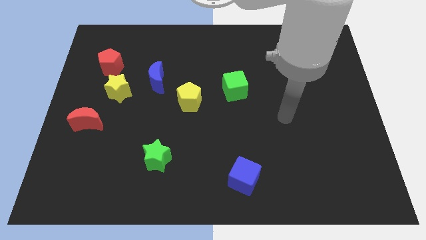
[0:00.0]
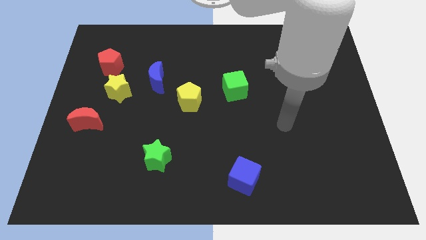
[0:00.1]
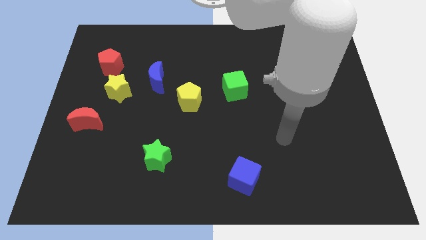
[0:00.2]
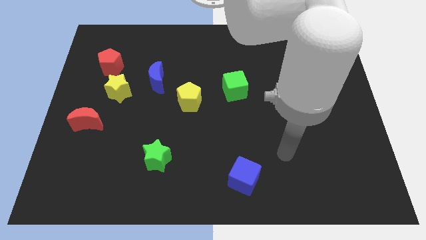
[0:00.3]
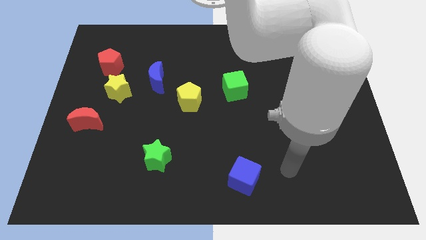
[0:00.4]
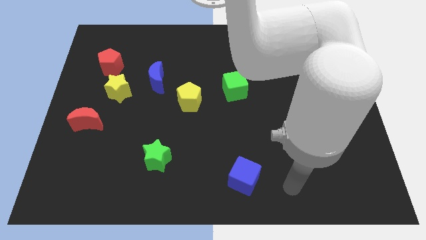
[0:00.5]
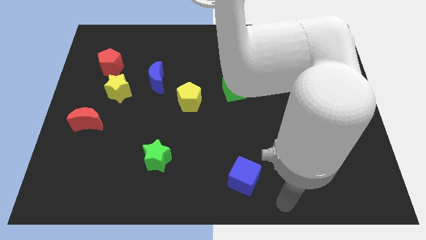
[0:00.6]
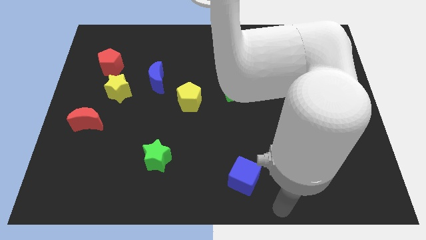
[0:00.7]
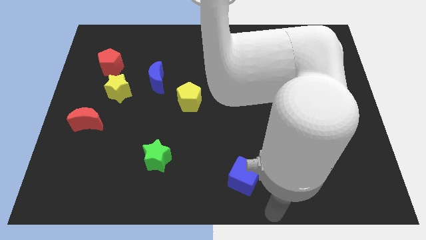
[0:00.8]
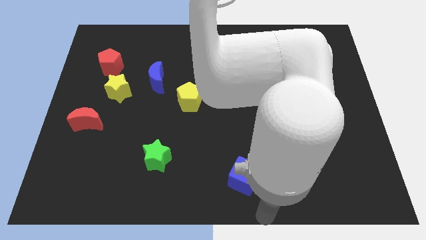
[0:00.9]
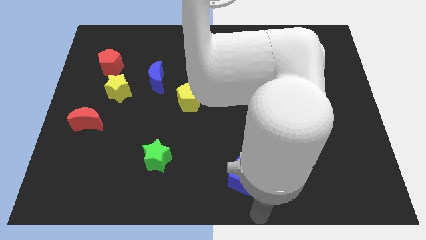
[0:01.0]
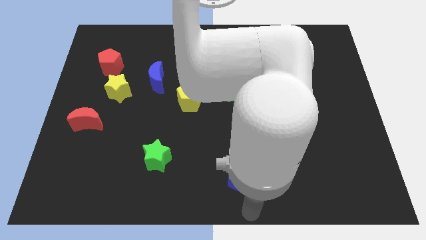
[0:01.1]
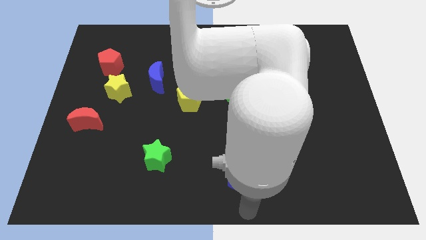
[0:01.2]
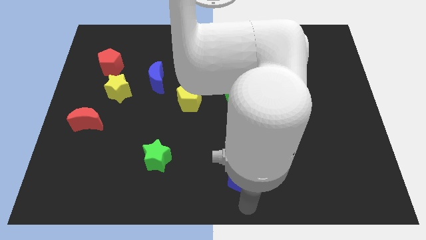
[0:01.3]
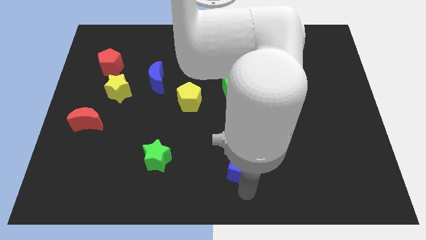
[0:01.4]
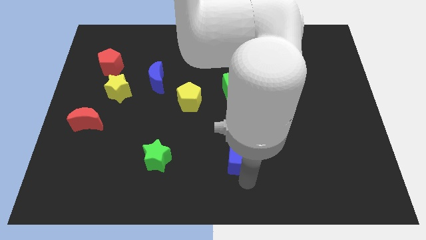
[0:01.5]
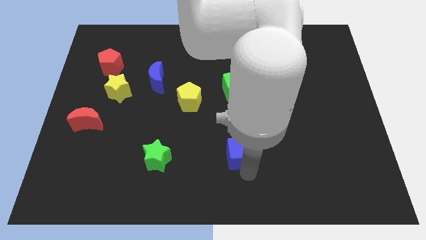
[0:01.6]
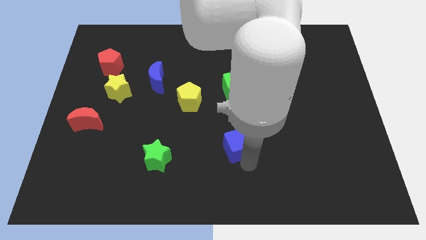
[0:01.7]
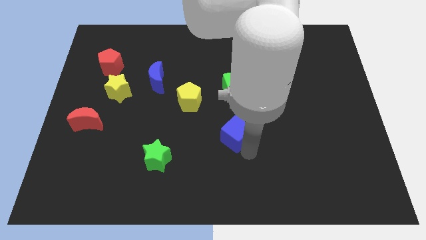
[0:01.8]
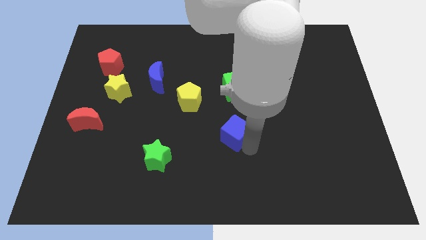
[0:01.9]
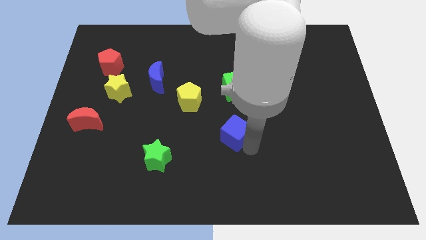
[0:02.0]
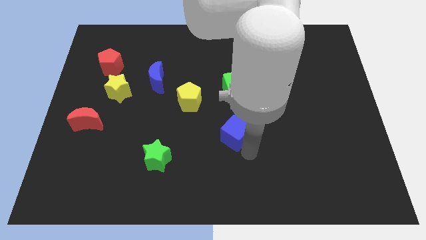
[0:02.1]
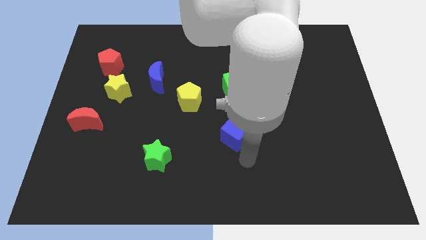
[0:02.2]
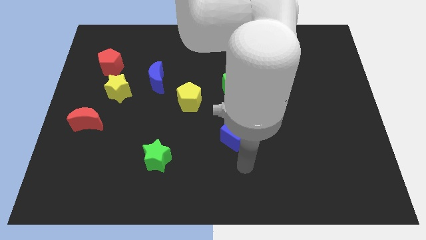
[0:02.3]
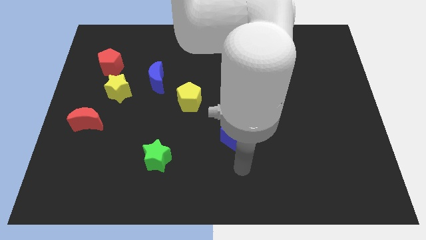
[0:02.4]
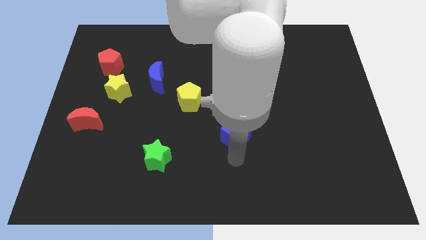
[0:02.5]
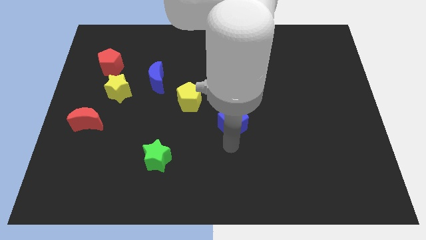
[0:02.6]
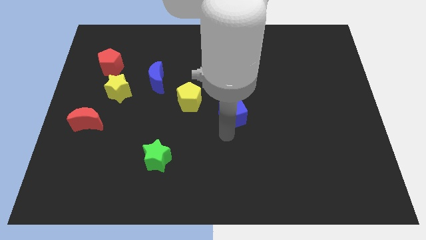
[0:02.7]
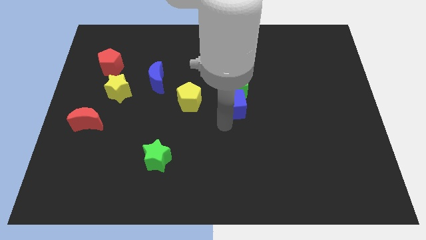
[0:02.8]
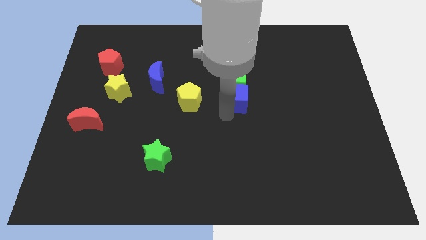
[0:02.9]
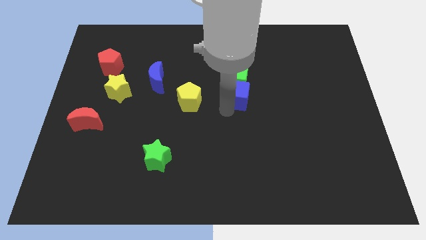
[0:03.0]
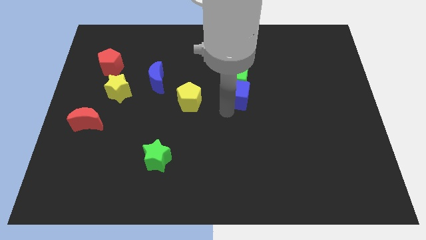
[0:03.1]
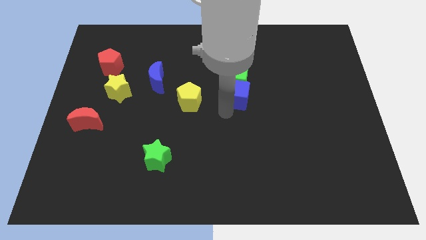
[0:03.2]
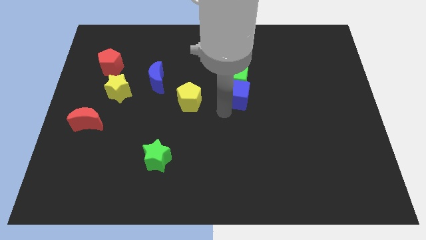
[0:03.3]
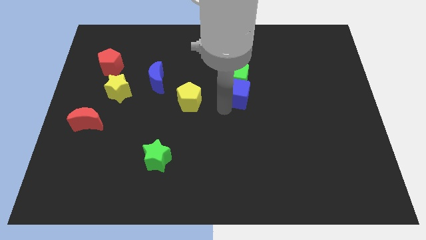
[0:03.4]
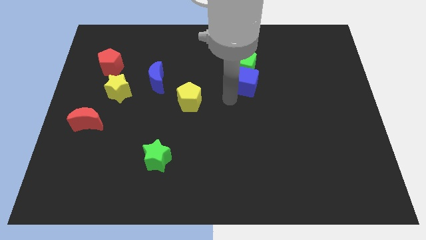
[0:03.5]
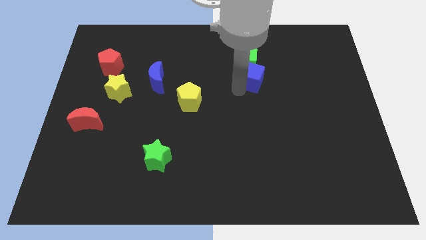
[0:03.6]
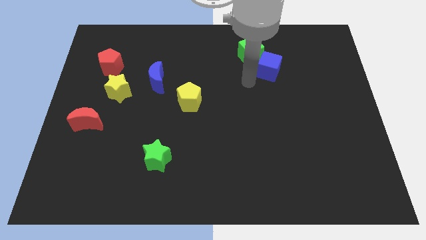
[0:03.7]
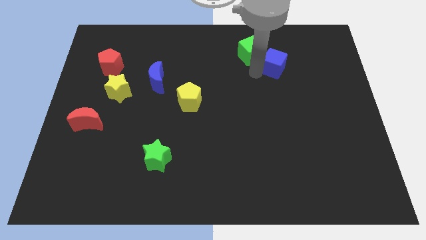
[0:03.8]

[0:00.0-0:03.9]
move the green cube and blue cube towards center top

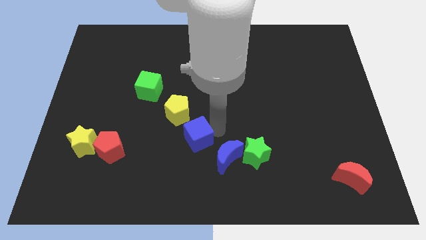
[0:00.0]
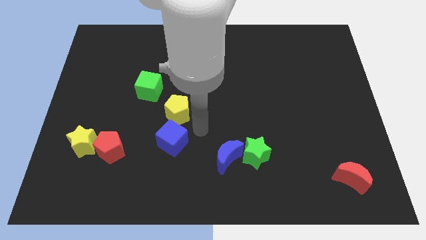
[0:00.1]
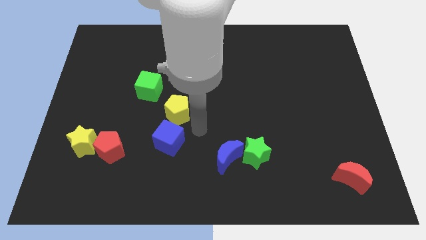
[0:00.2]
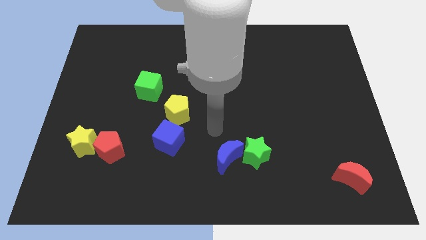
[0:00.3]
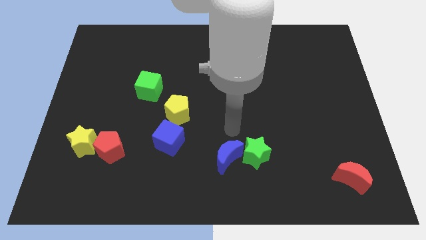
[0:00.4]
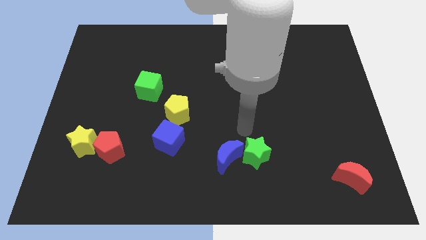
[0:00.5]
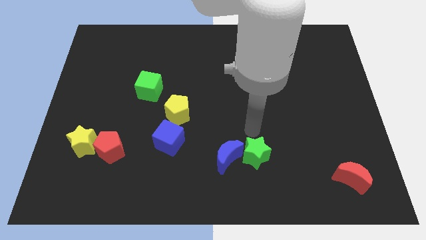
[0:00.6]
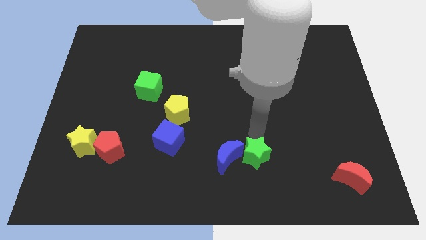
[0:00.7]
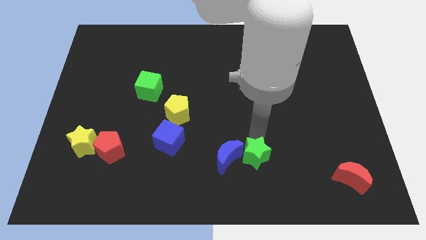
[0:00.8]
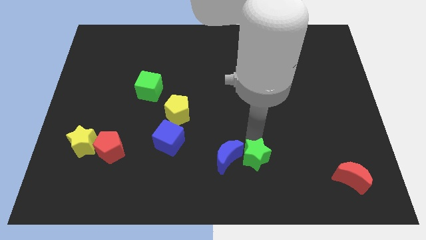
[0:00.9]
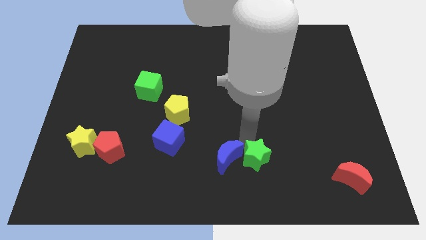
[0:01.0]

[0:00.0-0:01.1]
push the blue cube and point your arm close to green star

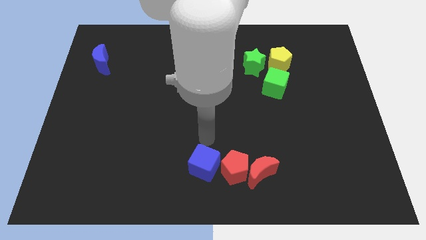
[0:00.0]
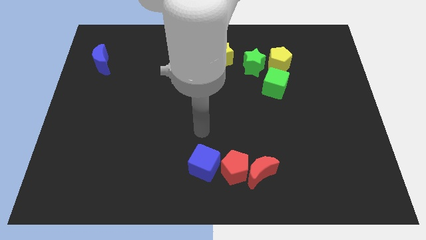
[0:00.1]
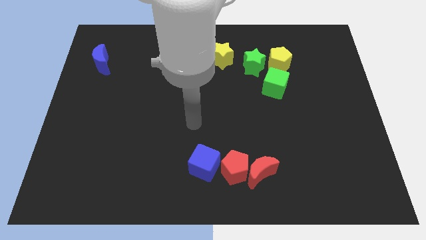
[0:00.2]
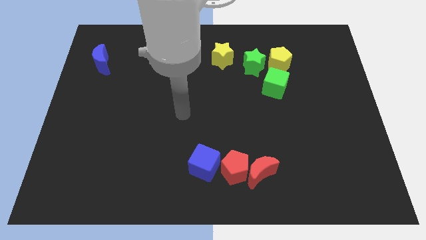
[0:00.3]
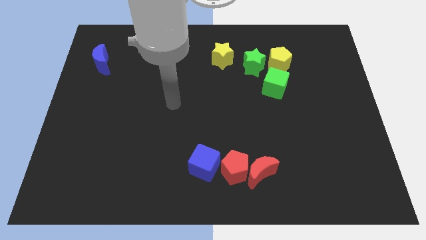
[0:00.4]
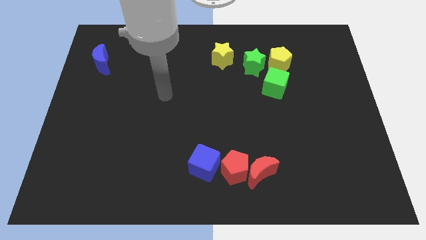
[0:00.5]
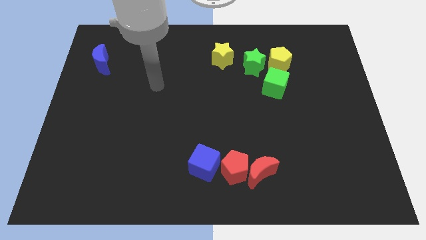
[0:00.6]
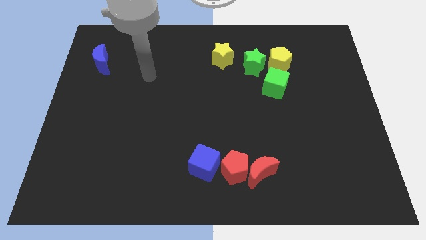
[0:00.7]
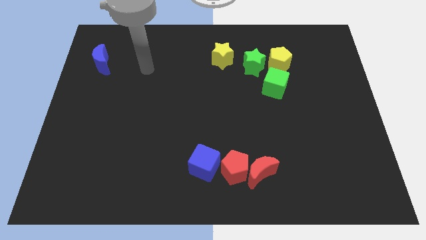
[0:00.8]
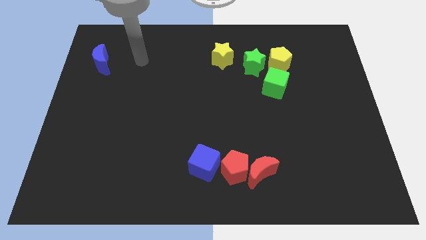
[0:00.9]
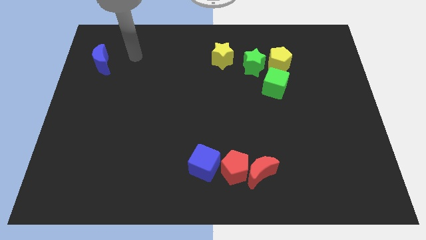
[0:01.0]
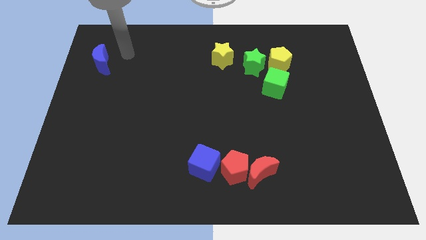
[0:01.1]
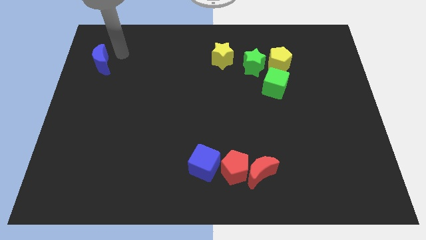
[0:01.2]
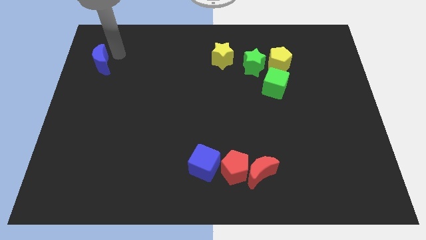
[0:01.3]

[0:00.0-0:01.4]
move your arm away from the blue cube

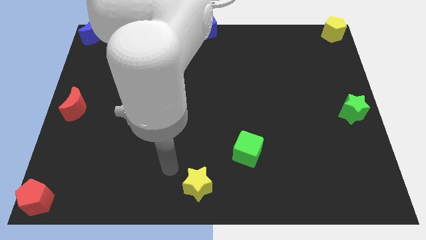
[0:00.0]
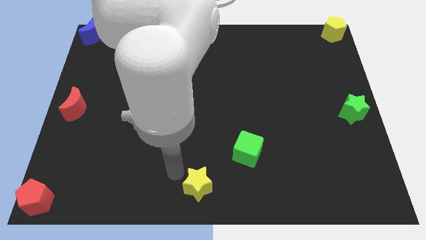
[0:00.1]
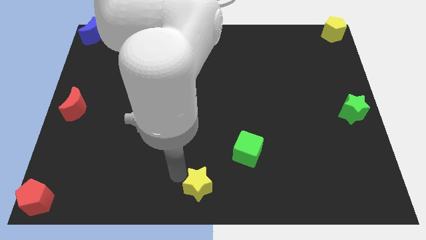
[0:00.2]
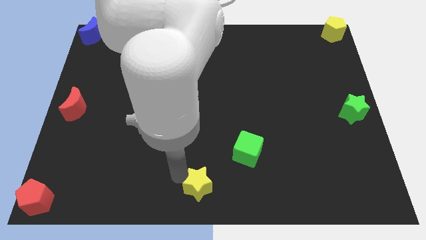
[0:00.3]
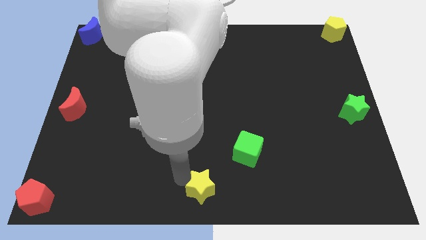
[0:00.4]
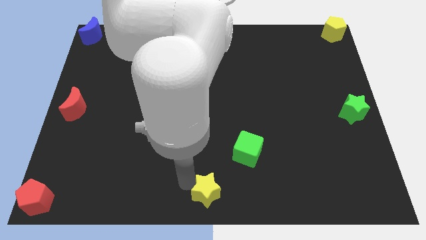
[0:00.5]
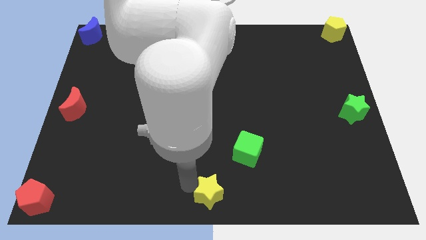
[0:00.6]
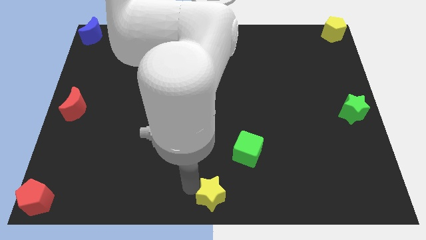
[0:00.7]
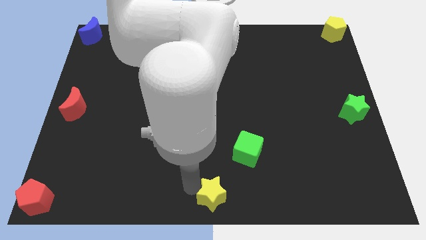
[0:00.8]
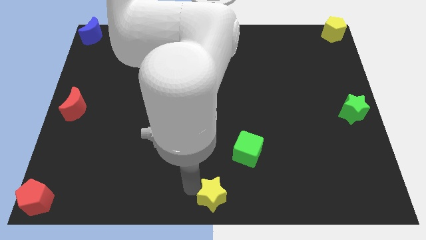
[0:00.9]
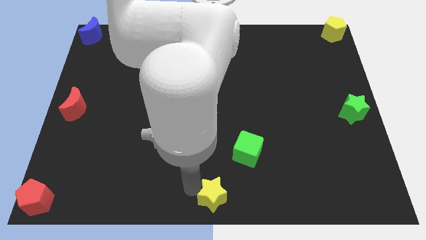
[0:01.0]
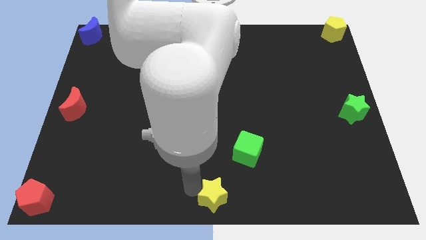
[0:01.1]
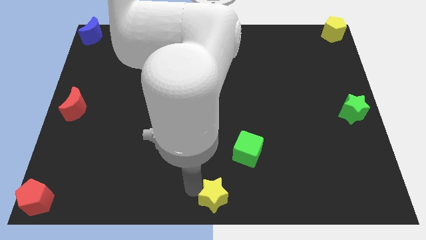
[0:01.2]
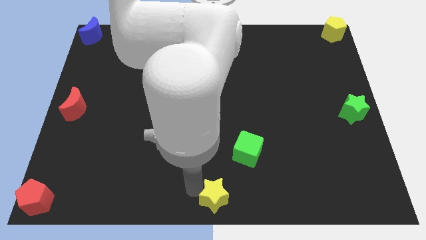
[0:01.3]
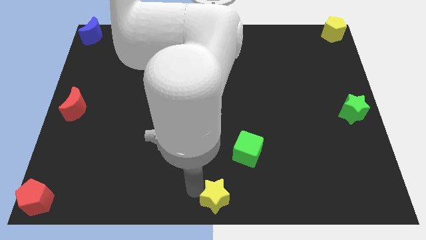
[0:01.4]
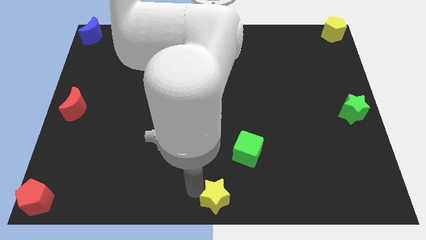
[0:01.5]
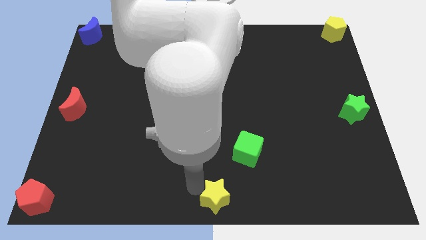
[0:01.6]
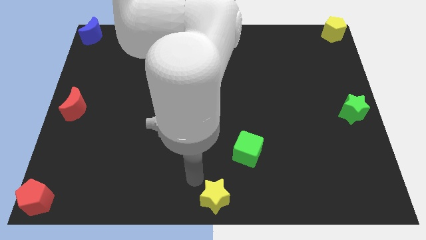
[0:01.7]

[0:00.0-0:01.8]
move the yellow star to the bottom center of the board

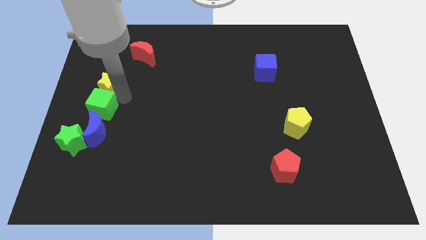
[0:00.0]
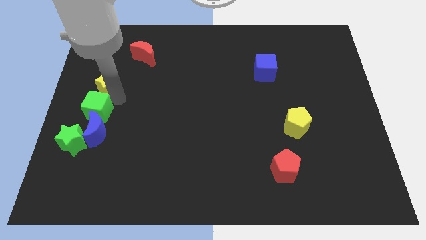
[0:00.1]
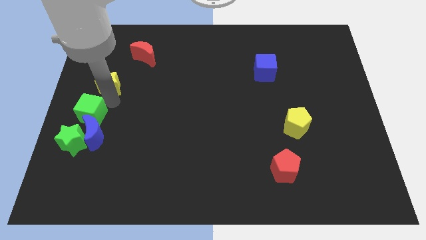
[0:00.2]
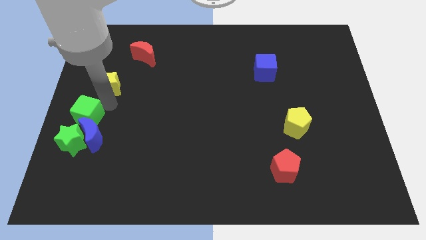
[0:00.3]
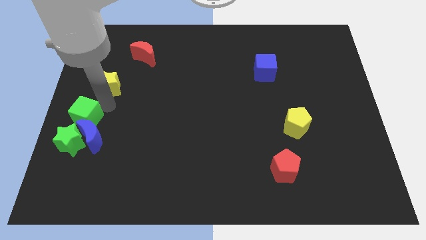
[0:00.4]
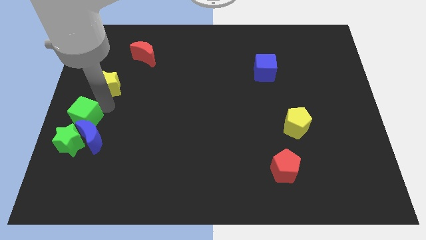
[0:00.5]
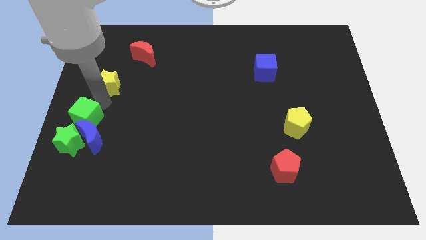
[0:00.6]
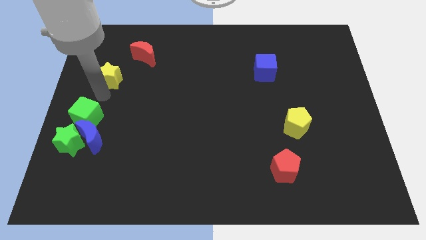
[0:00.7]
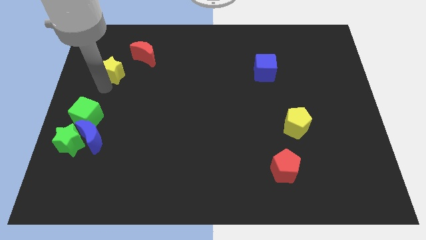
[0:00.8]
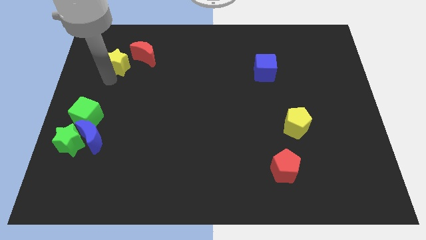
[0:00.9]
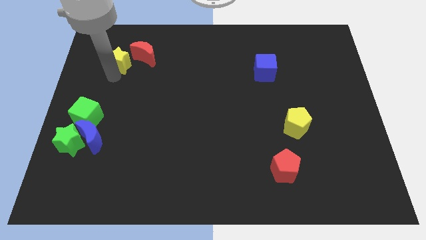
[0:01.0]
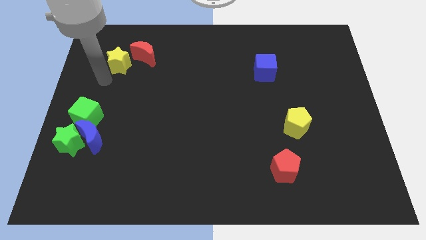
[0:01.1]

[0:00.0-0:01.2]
separate the yellow star from the green cube
